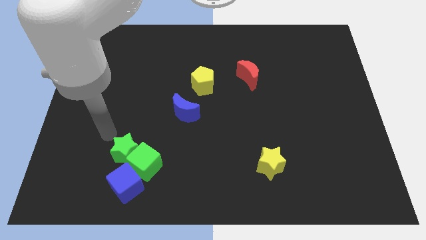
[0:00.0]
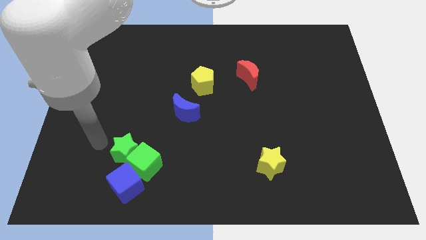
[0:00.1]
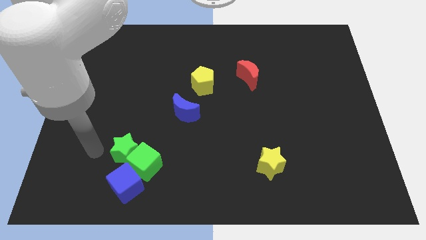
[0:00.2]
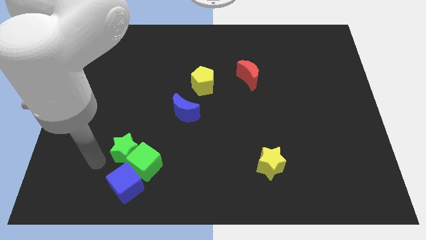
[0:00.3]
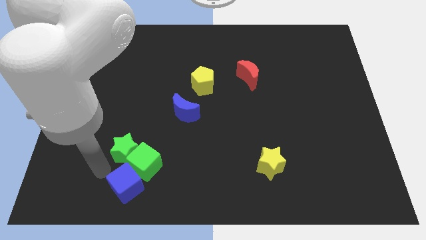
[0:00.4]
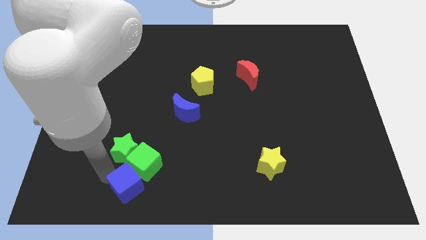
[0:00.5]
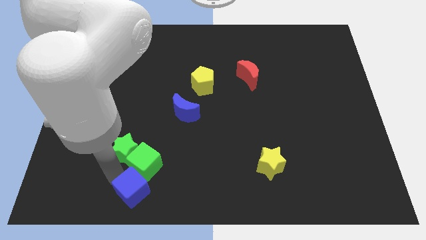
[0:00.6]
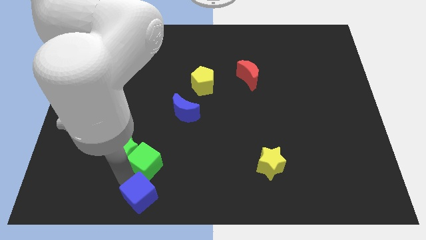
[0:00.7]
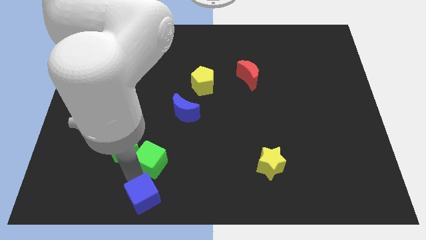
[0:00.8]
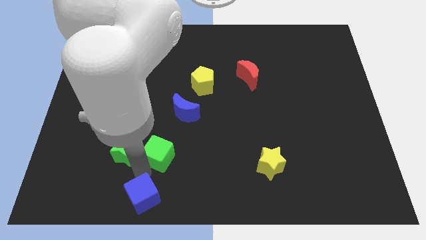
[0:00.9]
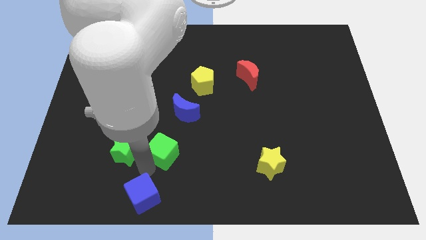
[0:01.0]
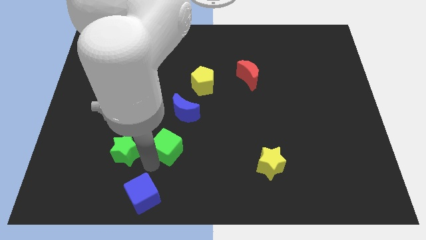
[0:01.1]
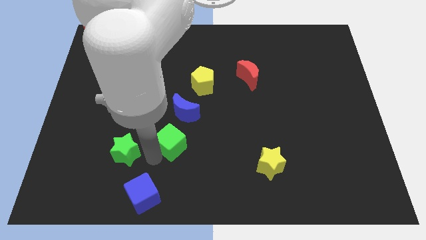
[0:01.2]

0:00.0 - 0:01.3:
move the green cube diagonal to the blue moon

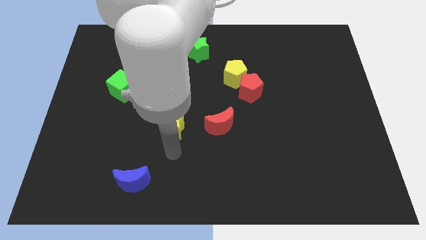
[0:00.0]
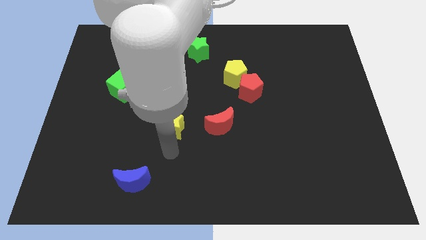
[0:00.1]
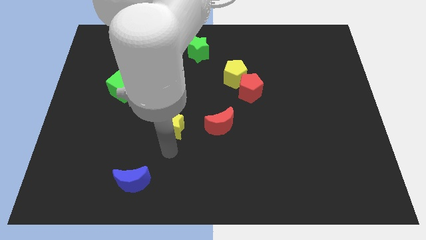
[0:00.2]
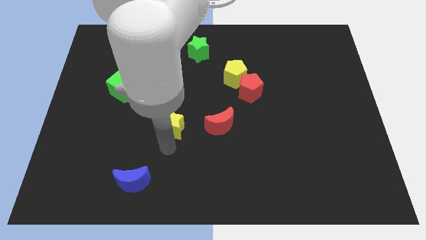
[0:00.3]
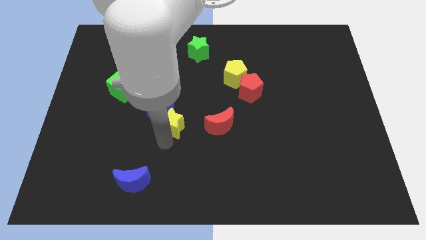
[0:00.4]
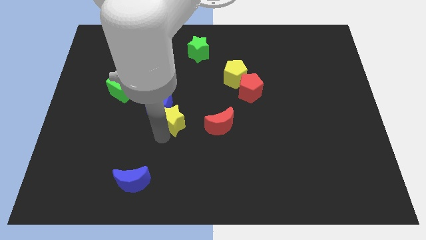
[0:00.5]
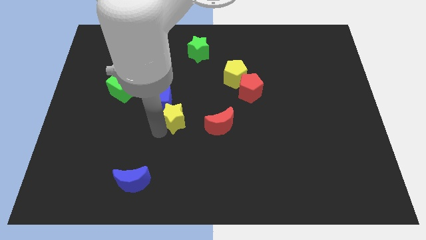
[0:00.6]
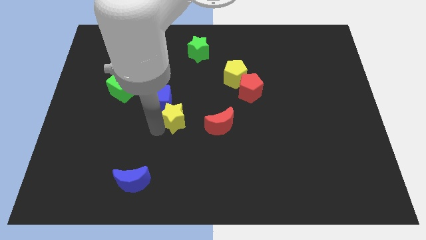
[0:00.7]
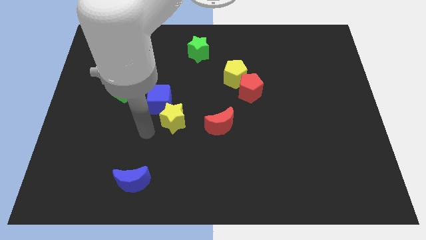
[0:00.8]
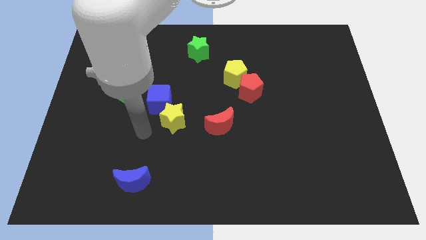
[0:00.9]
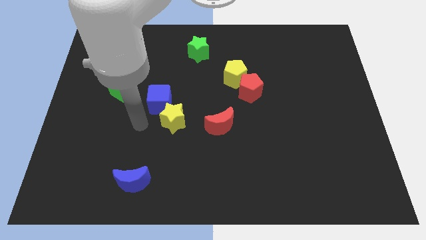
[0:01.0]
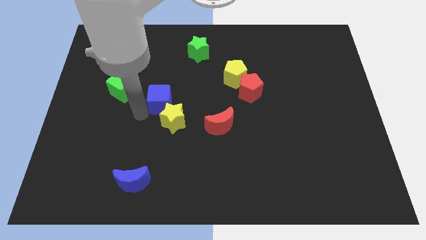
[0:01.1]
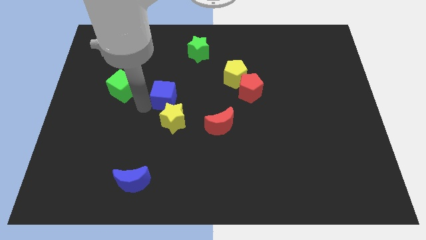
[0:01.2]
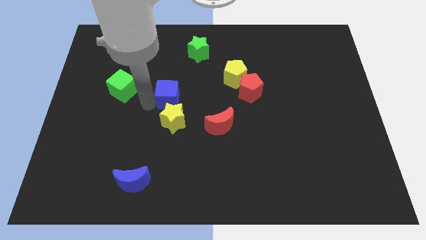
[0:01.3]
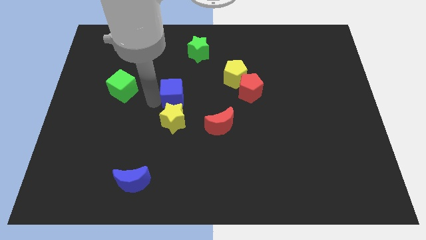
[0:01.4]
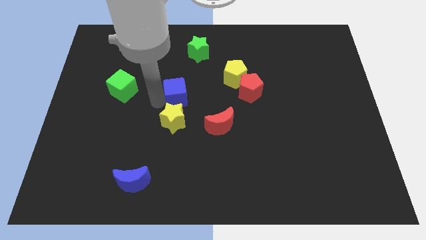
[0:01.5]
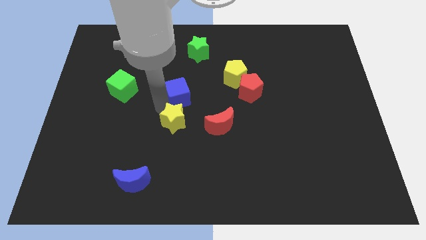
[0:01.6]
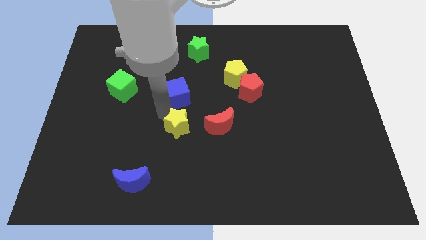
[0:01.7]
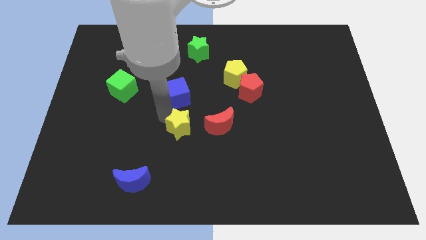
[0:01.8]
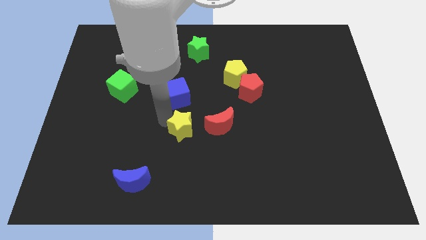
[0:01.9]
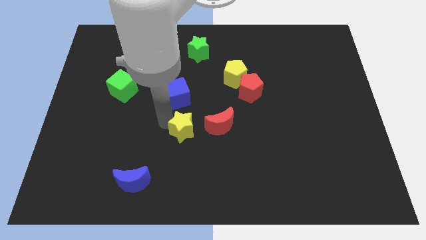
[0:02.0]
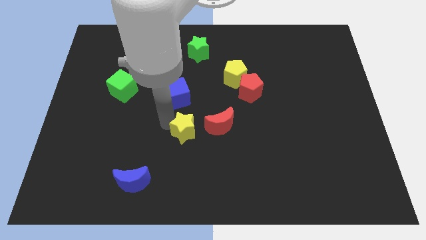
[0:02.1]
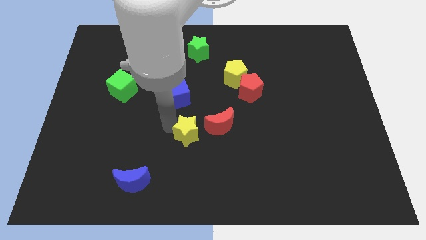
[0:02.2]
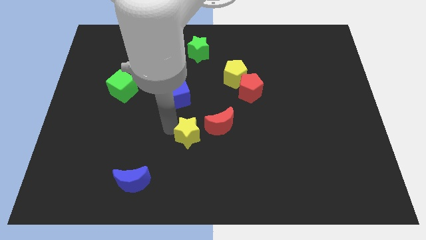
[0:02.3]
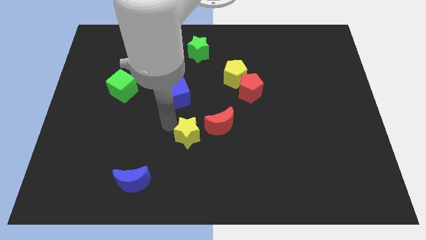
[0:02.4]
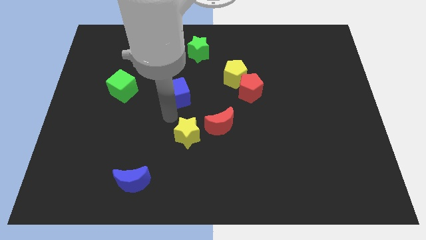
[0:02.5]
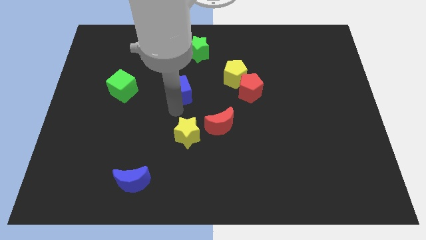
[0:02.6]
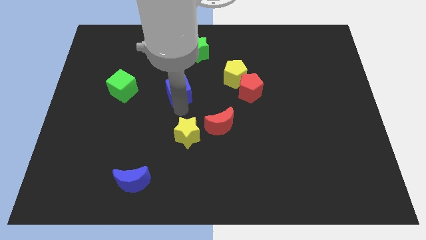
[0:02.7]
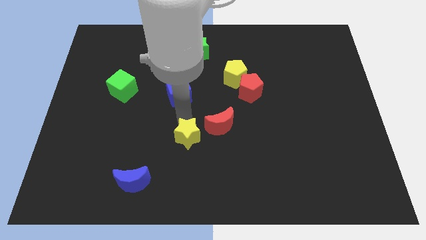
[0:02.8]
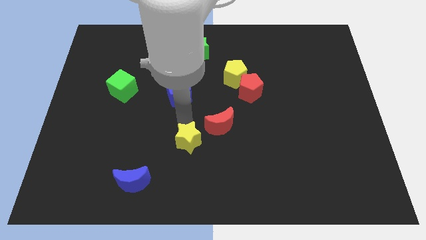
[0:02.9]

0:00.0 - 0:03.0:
place the yellow star diagonal to the blue moon

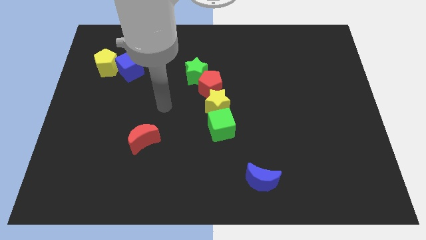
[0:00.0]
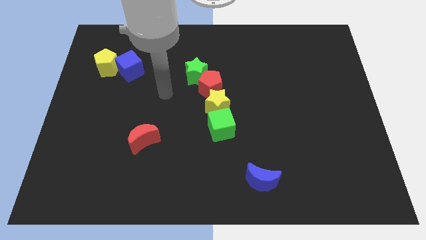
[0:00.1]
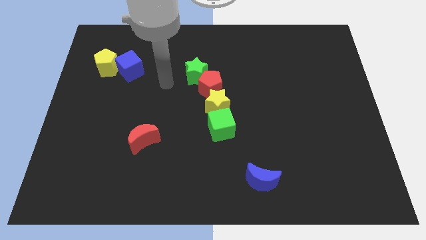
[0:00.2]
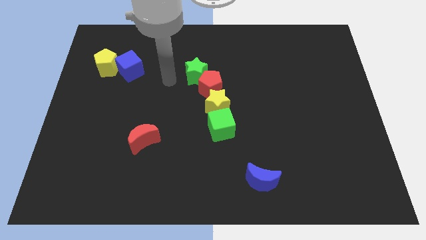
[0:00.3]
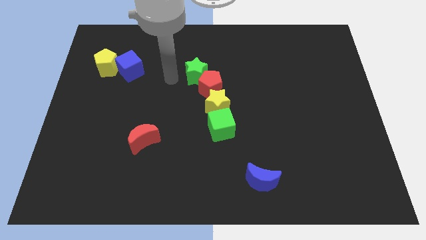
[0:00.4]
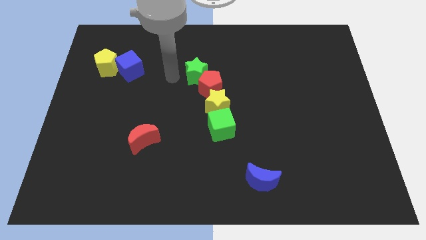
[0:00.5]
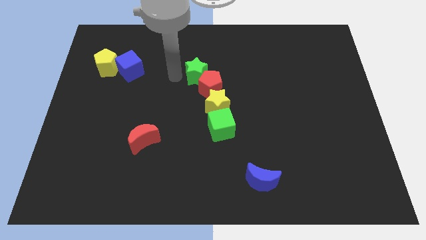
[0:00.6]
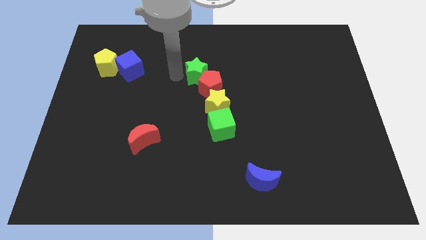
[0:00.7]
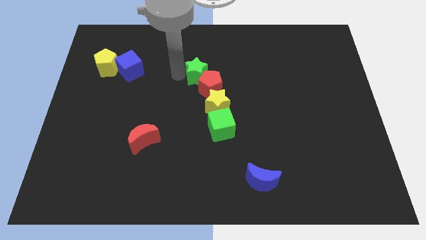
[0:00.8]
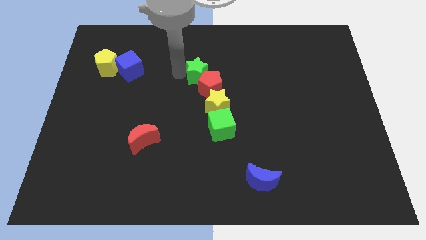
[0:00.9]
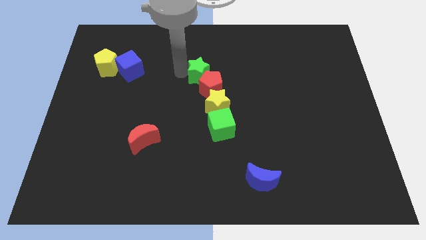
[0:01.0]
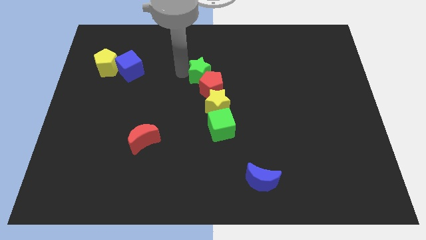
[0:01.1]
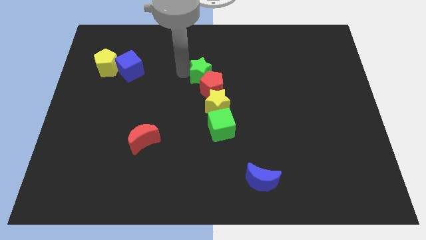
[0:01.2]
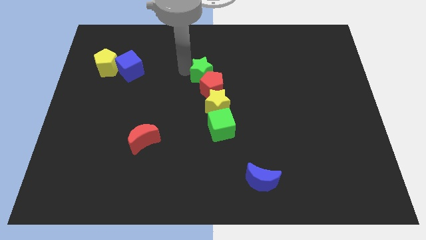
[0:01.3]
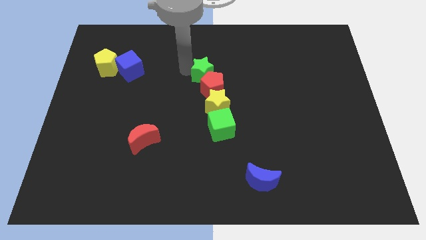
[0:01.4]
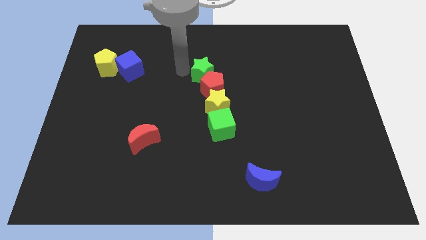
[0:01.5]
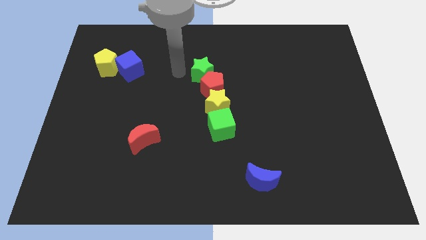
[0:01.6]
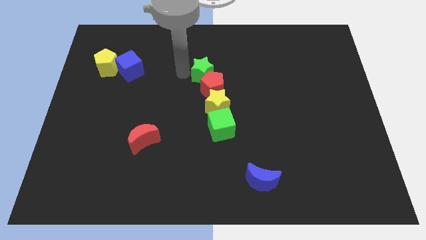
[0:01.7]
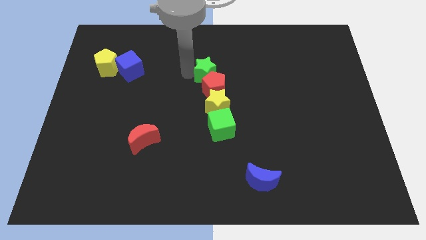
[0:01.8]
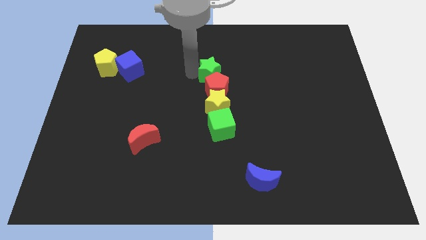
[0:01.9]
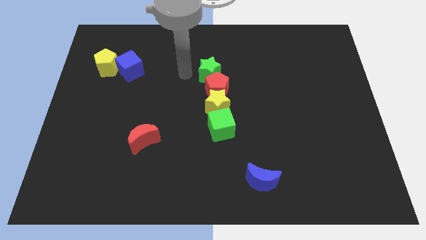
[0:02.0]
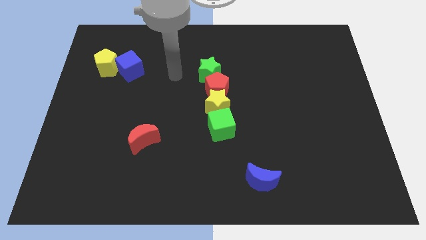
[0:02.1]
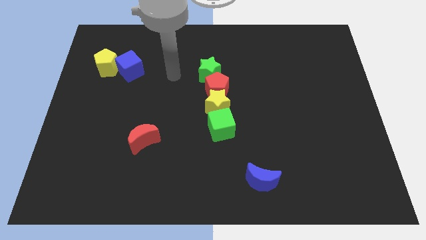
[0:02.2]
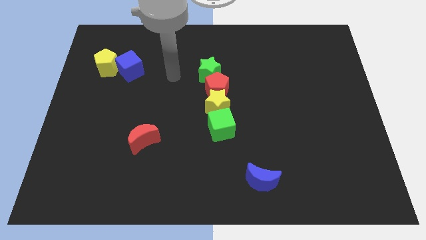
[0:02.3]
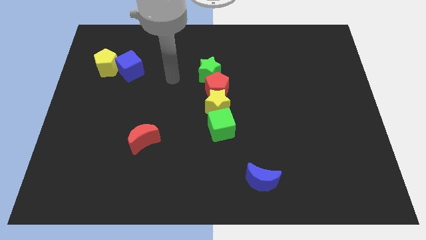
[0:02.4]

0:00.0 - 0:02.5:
adjust the green star above the red pentagon vertically

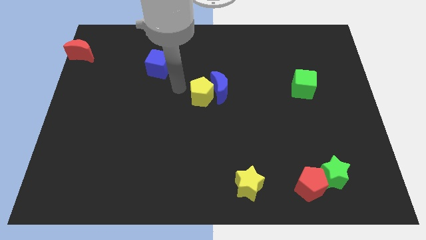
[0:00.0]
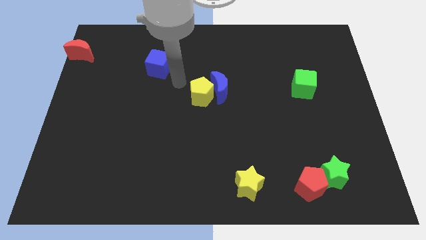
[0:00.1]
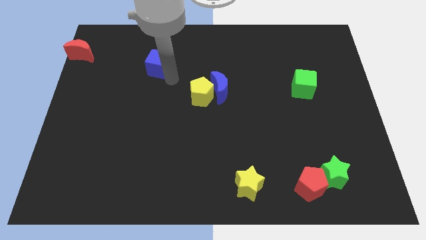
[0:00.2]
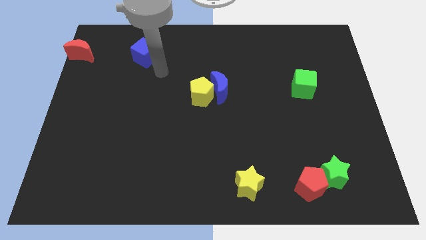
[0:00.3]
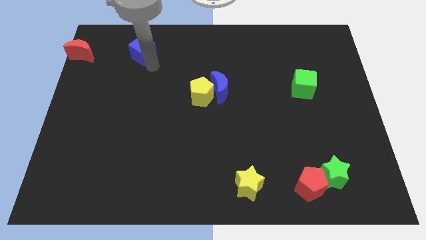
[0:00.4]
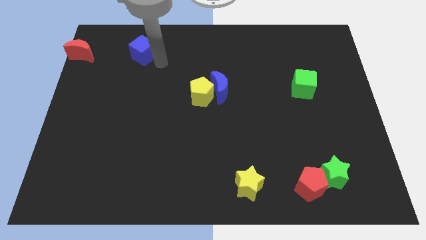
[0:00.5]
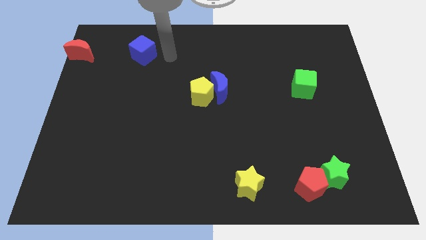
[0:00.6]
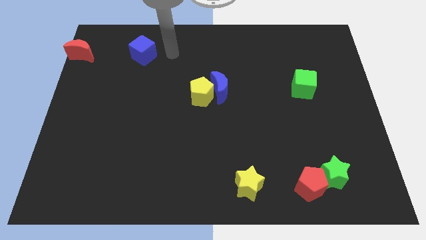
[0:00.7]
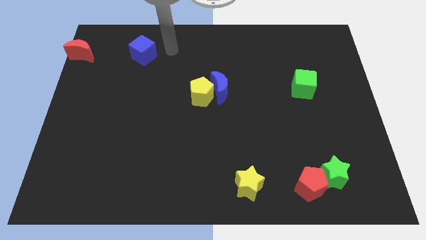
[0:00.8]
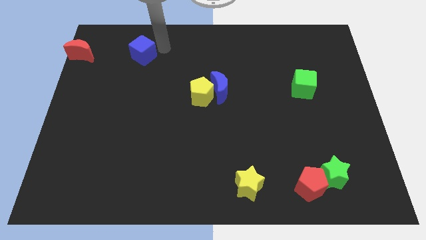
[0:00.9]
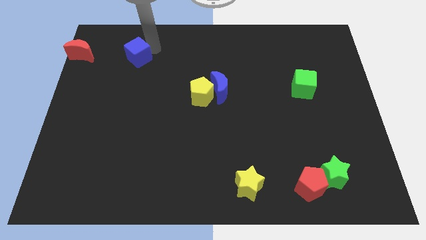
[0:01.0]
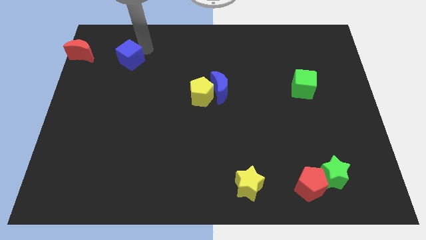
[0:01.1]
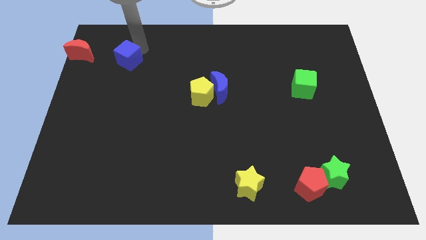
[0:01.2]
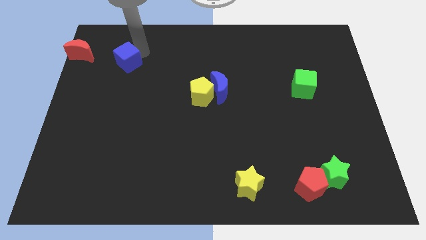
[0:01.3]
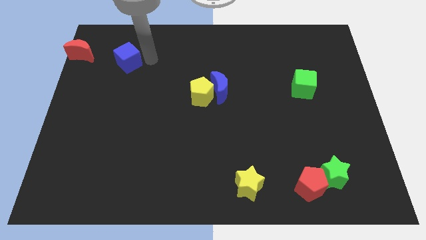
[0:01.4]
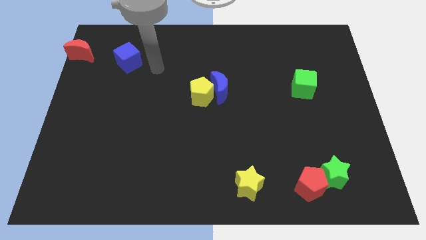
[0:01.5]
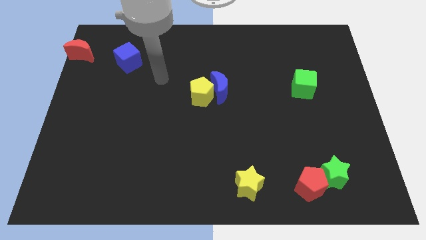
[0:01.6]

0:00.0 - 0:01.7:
place the blue cube at the right side of the red crescent

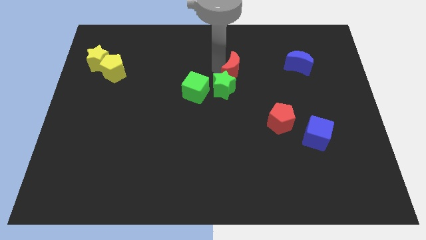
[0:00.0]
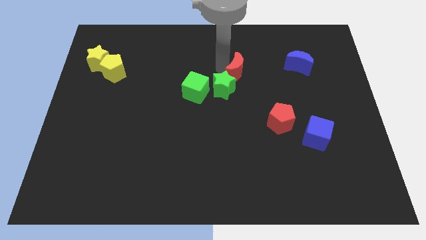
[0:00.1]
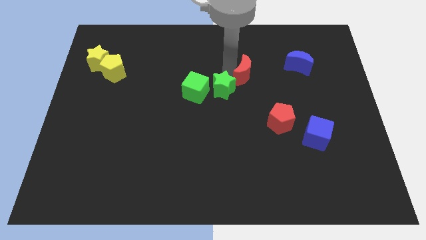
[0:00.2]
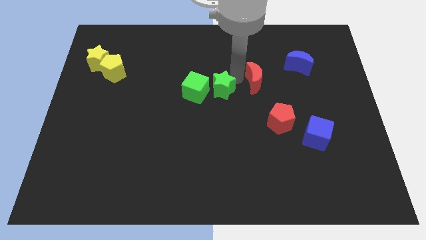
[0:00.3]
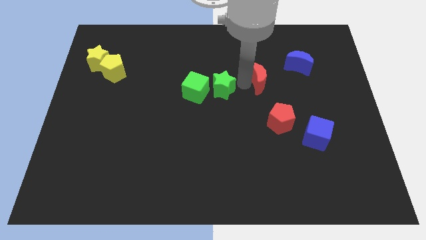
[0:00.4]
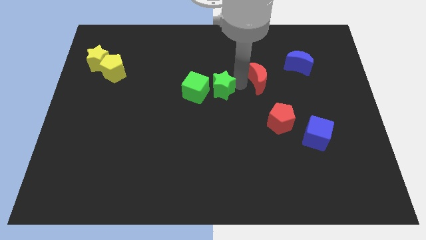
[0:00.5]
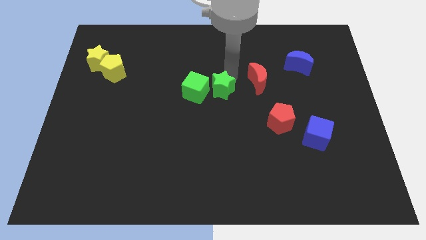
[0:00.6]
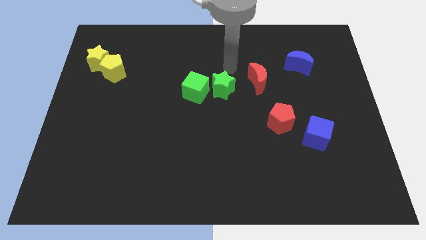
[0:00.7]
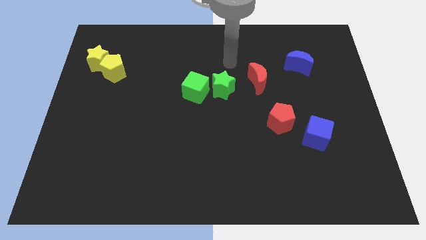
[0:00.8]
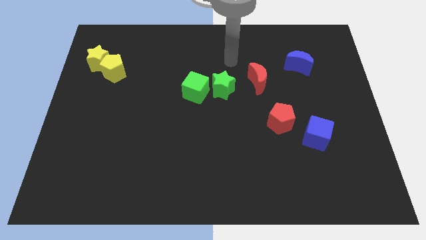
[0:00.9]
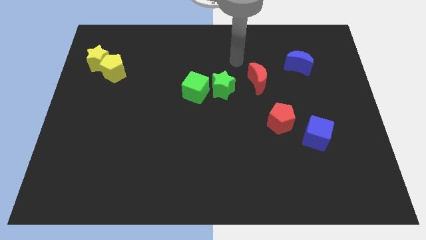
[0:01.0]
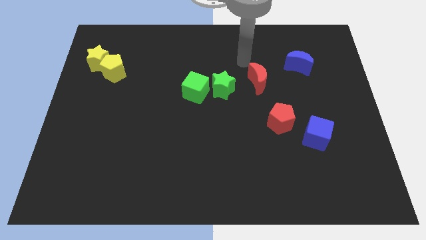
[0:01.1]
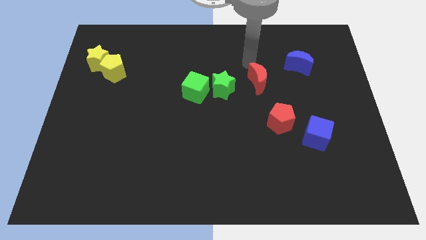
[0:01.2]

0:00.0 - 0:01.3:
separate the green star and the red moon
